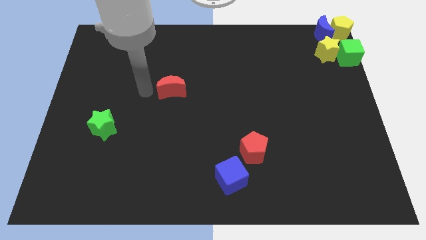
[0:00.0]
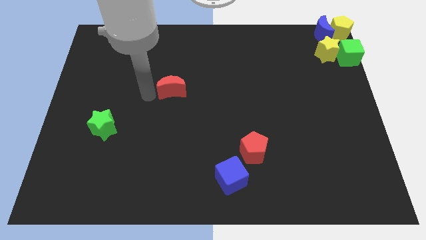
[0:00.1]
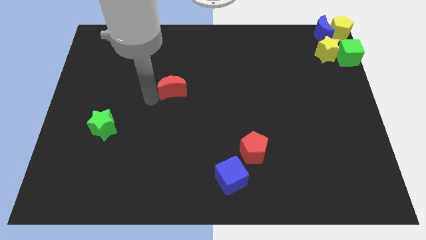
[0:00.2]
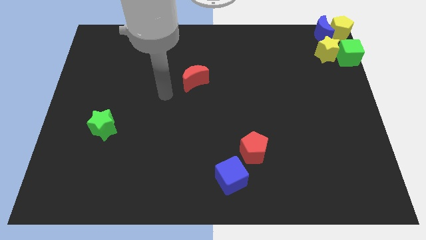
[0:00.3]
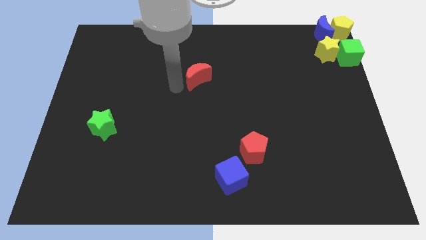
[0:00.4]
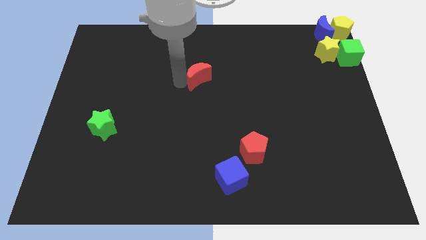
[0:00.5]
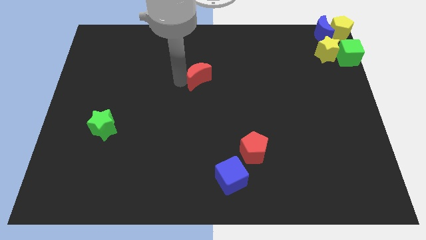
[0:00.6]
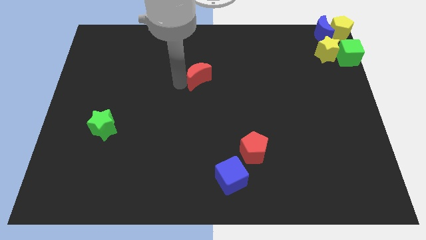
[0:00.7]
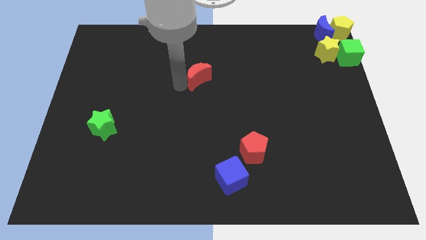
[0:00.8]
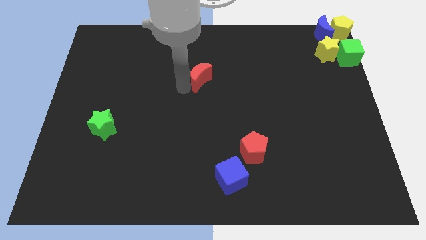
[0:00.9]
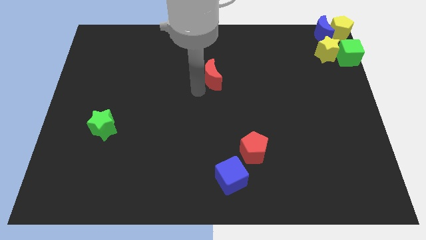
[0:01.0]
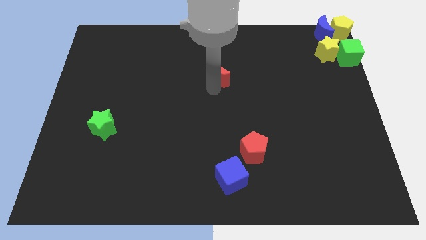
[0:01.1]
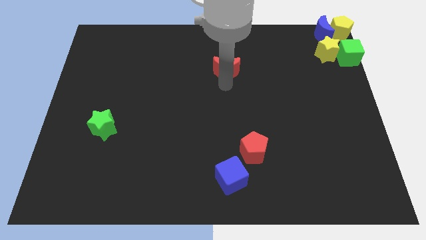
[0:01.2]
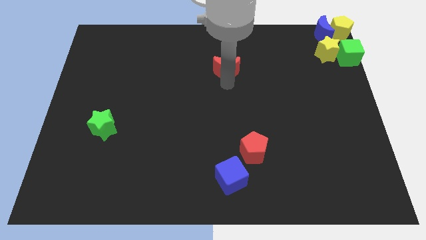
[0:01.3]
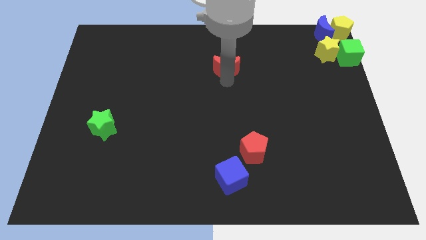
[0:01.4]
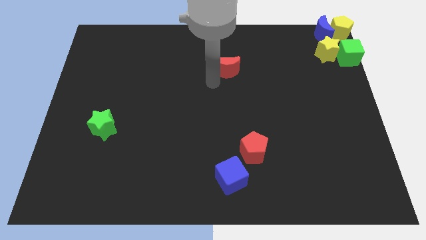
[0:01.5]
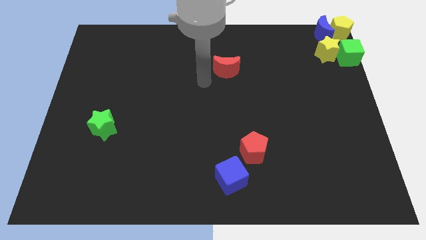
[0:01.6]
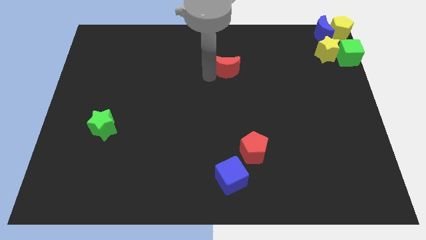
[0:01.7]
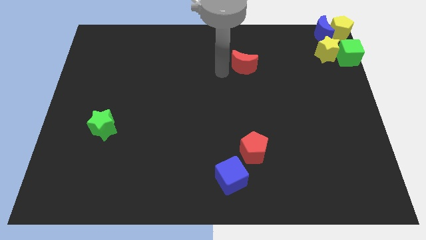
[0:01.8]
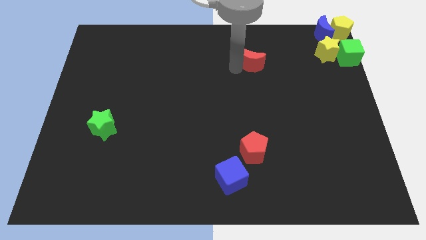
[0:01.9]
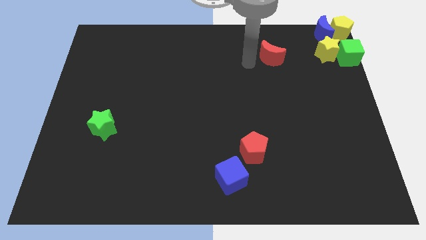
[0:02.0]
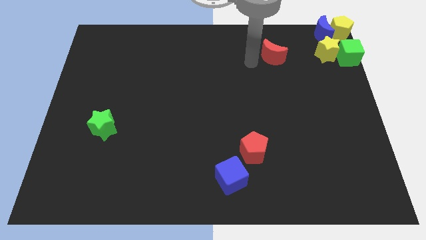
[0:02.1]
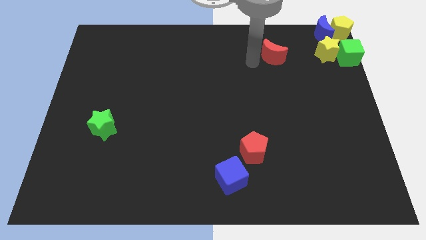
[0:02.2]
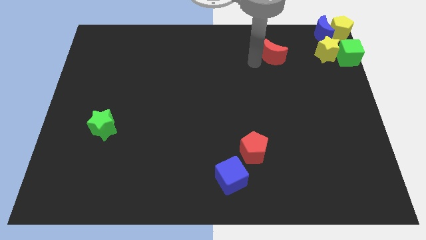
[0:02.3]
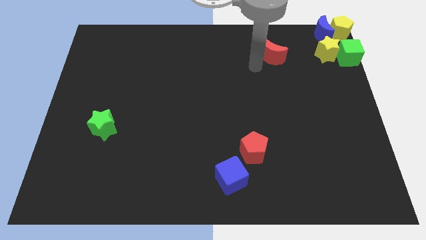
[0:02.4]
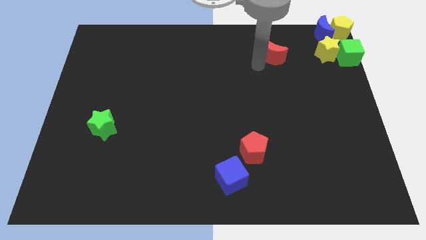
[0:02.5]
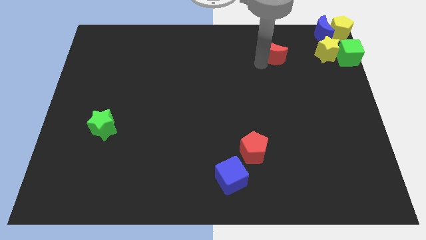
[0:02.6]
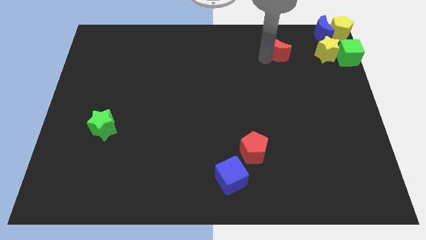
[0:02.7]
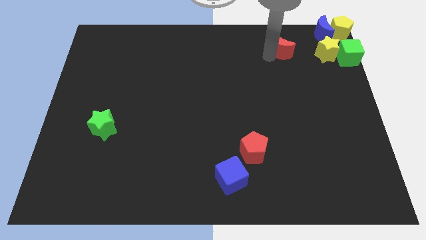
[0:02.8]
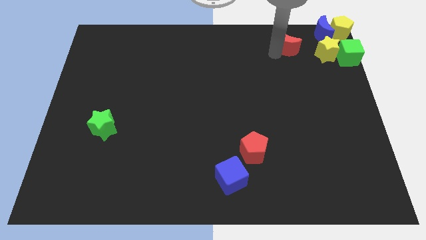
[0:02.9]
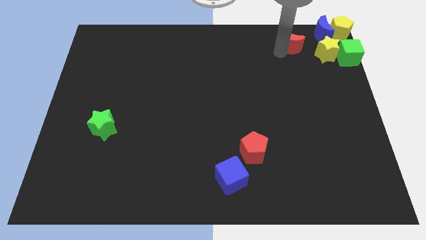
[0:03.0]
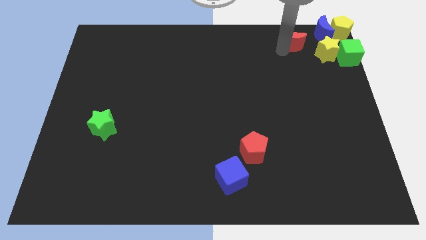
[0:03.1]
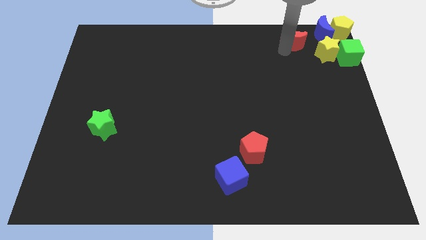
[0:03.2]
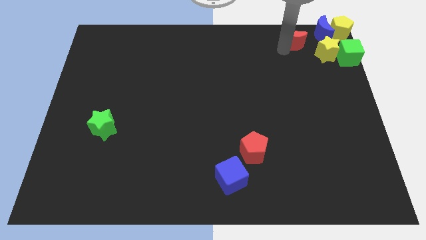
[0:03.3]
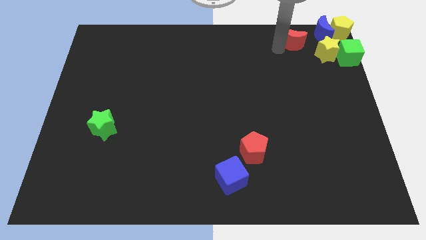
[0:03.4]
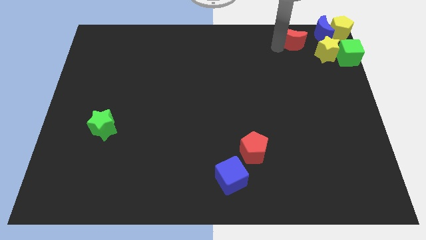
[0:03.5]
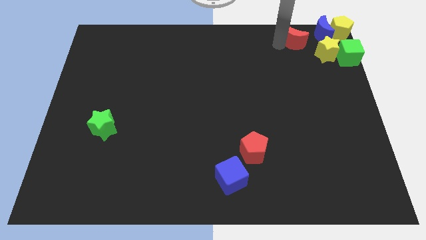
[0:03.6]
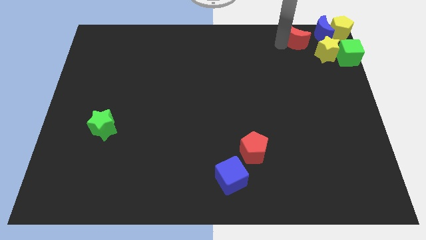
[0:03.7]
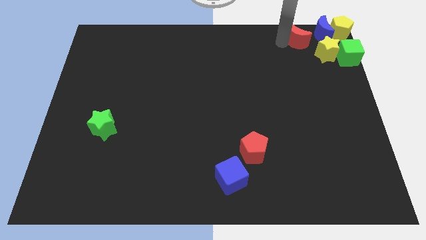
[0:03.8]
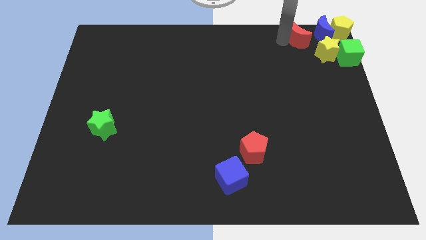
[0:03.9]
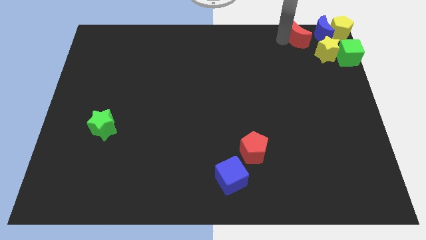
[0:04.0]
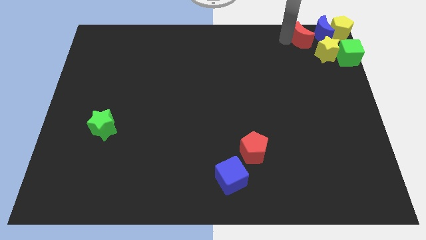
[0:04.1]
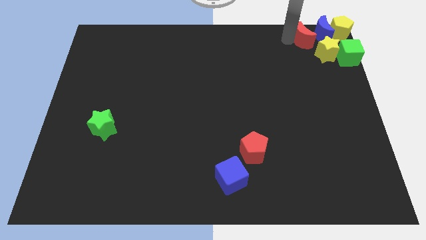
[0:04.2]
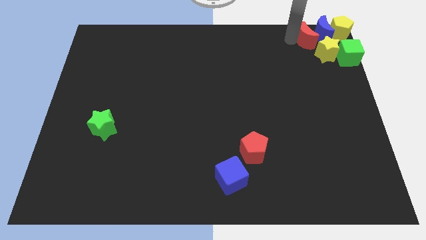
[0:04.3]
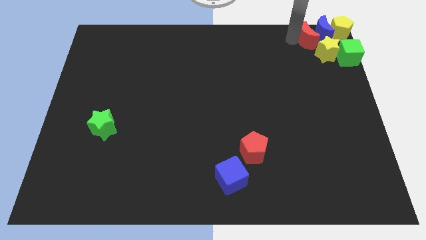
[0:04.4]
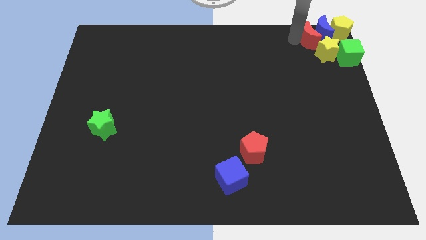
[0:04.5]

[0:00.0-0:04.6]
push the red moon to the group of blocks

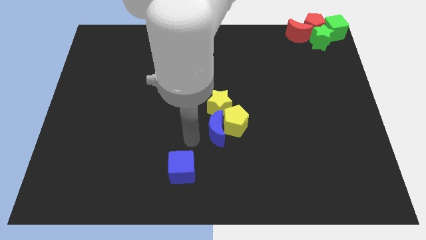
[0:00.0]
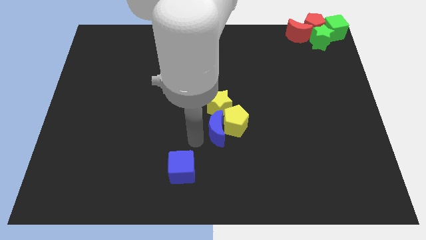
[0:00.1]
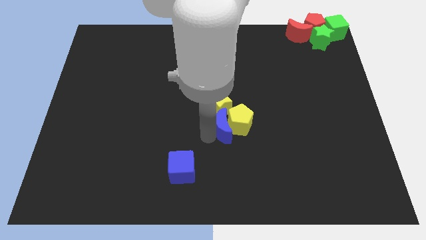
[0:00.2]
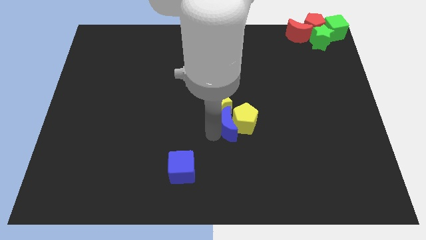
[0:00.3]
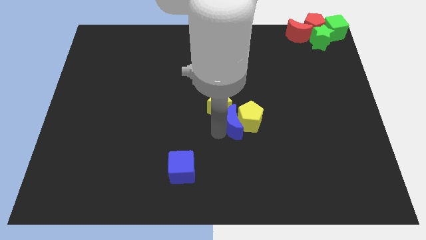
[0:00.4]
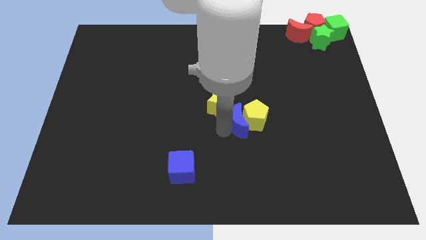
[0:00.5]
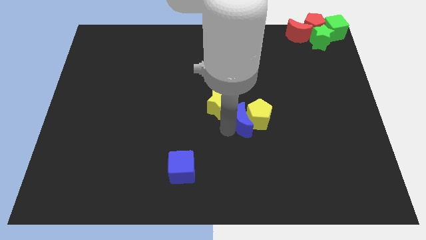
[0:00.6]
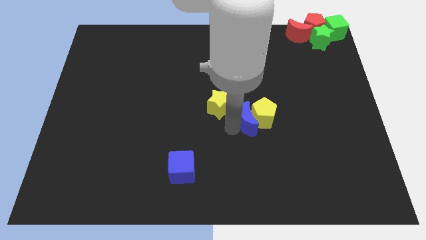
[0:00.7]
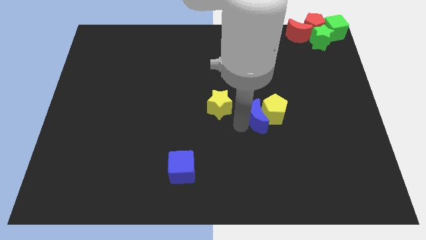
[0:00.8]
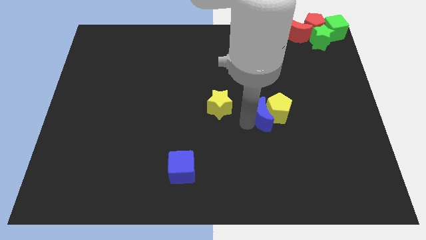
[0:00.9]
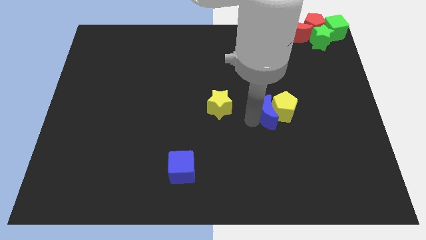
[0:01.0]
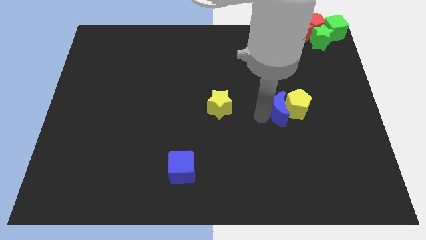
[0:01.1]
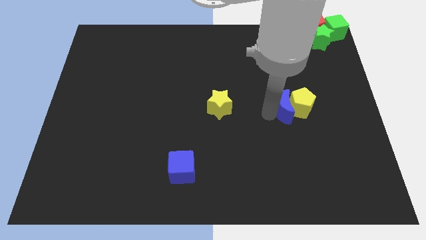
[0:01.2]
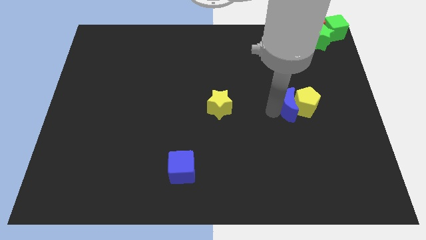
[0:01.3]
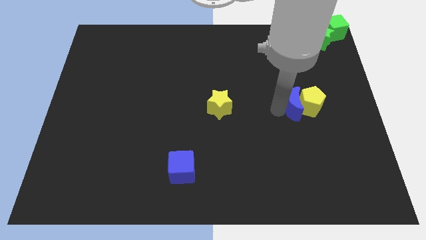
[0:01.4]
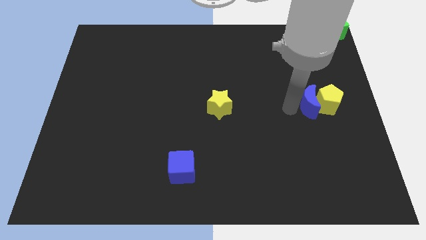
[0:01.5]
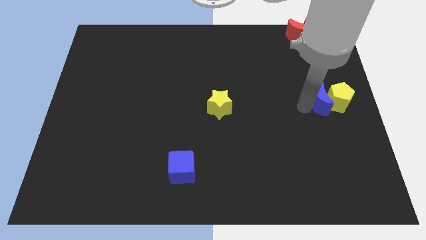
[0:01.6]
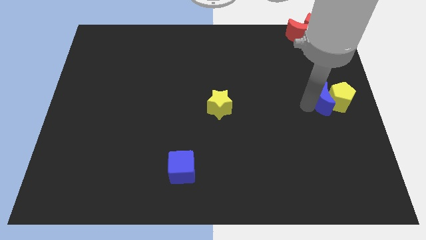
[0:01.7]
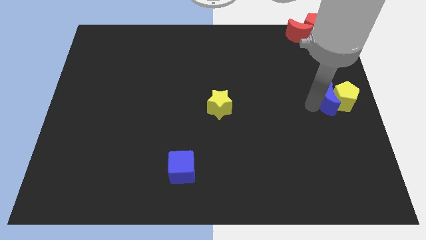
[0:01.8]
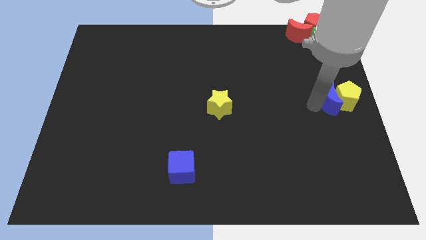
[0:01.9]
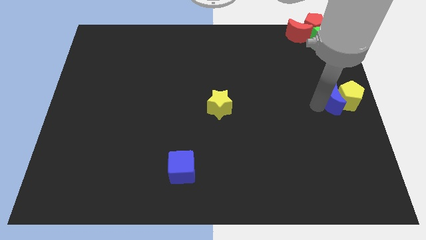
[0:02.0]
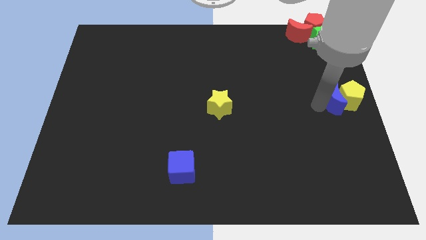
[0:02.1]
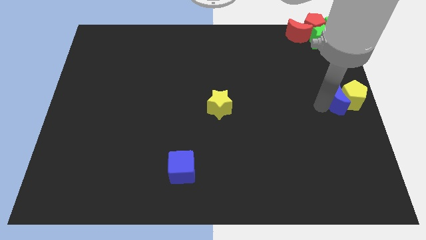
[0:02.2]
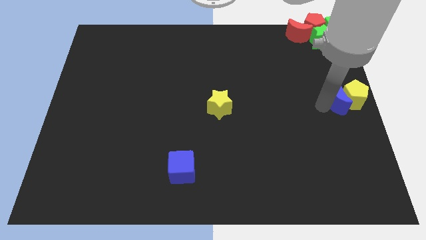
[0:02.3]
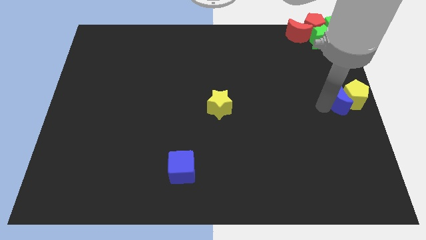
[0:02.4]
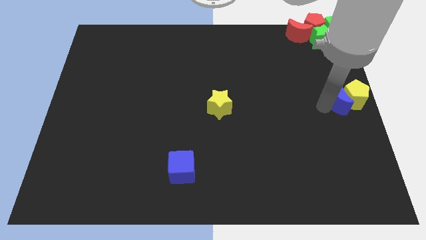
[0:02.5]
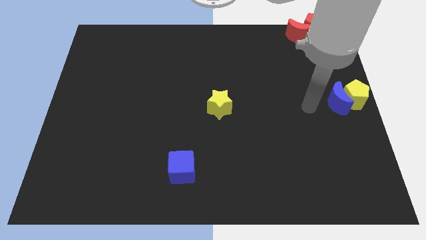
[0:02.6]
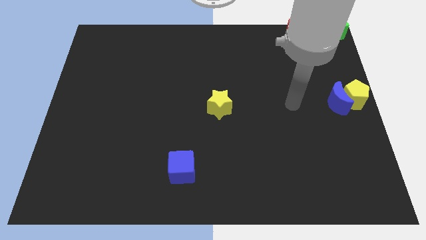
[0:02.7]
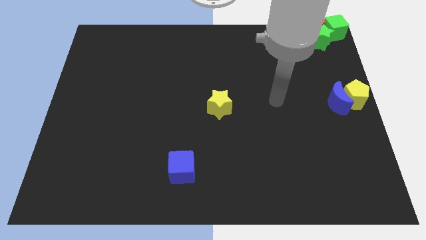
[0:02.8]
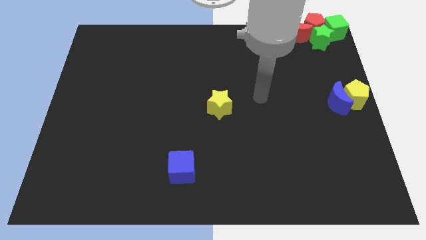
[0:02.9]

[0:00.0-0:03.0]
separate blue moon and yellow pentagon from yellow star

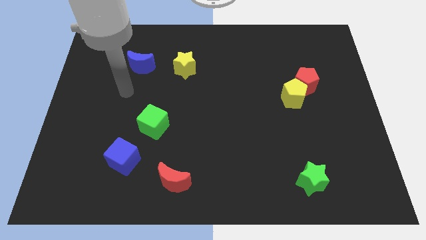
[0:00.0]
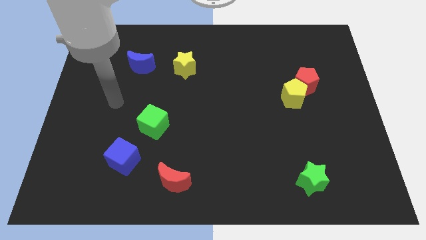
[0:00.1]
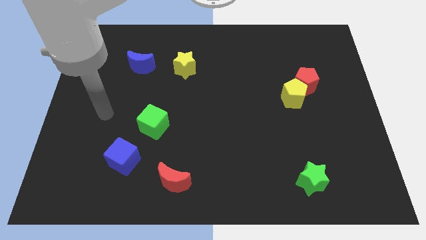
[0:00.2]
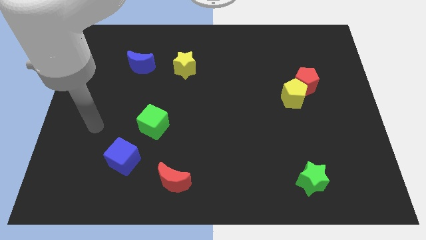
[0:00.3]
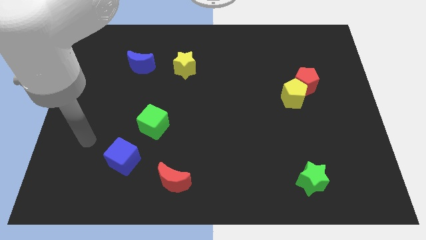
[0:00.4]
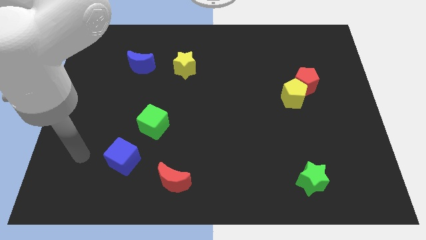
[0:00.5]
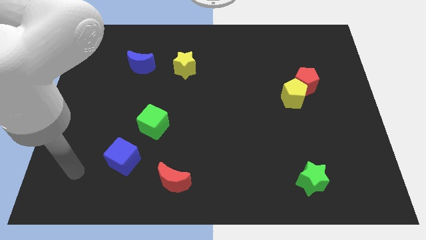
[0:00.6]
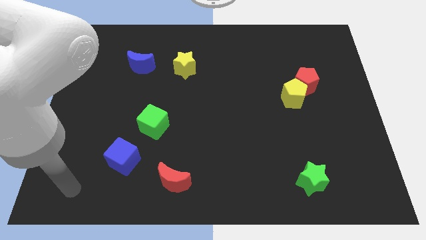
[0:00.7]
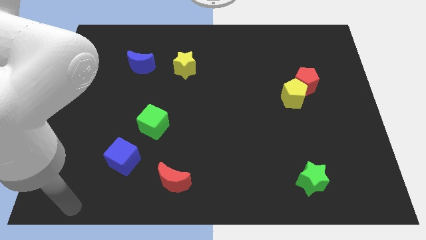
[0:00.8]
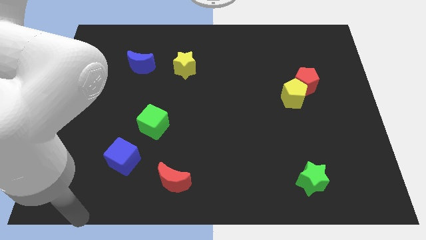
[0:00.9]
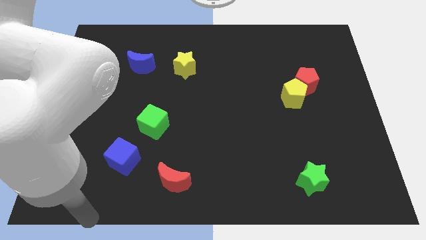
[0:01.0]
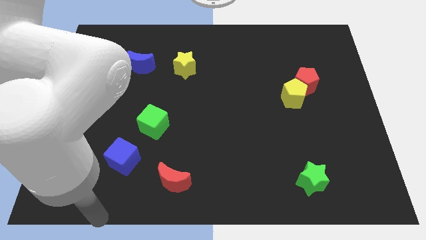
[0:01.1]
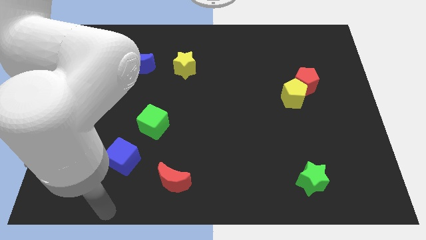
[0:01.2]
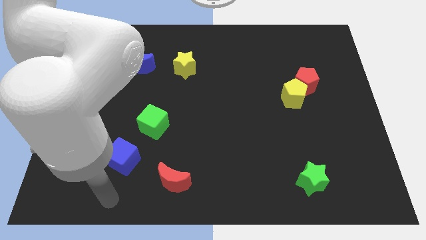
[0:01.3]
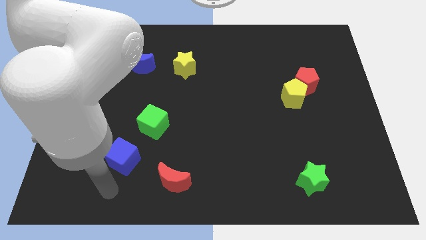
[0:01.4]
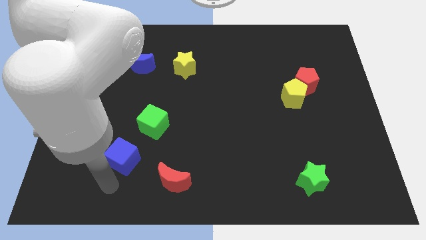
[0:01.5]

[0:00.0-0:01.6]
place your arm to the bottom of the blue cube
